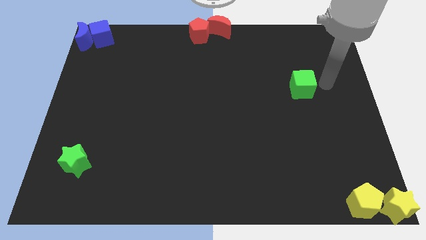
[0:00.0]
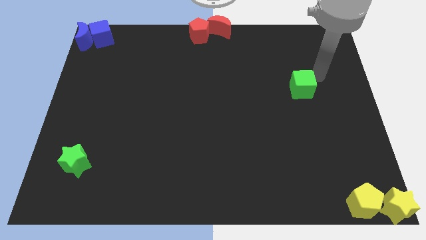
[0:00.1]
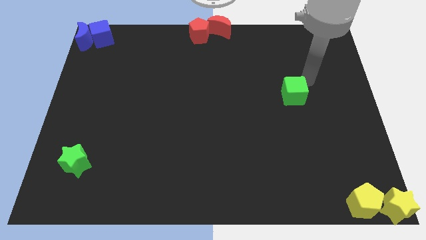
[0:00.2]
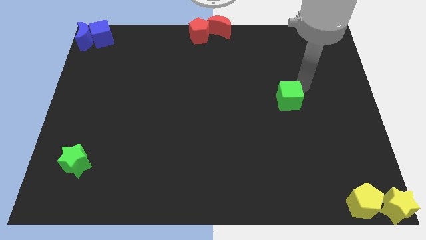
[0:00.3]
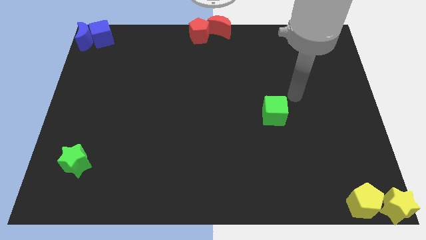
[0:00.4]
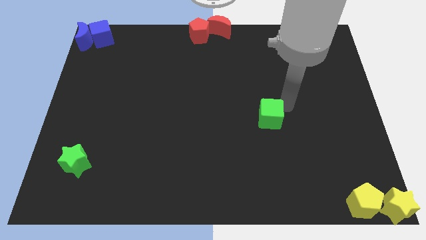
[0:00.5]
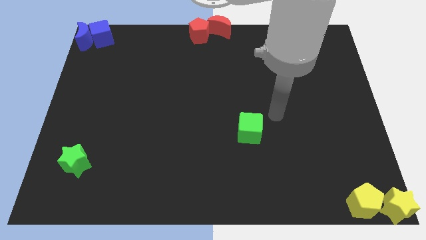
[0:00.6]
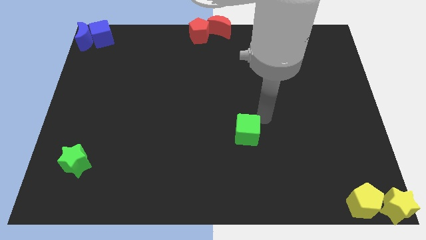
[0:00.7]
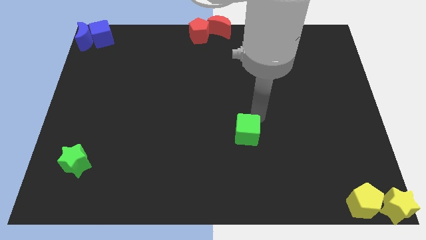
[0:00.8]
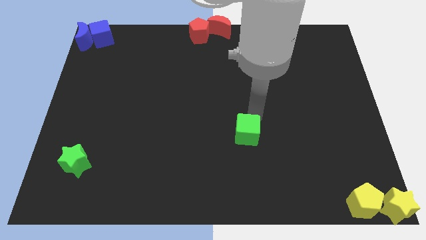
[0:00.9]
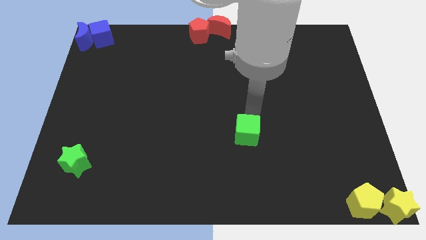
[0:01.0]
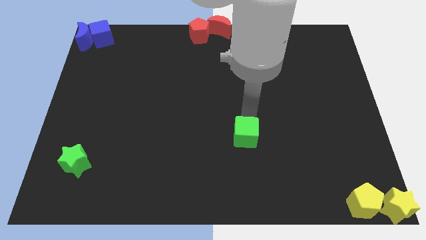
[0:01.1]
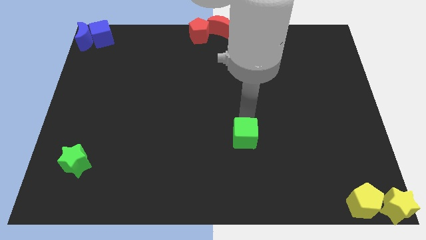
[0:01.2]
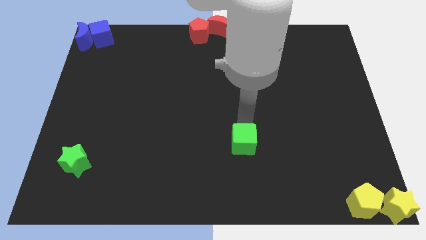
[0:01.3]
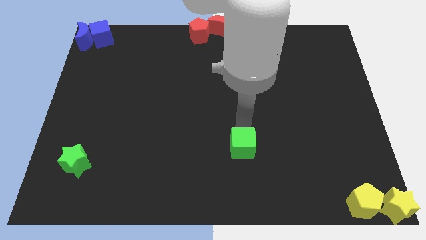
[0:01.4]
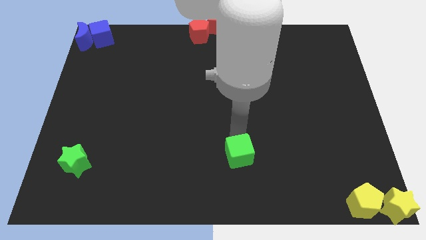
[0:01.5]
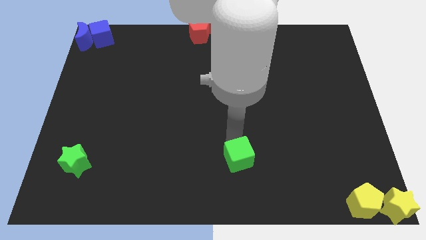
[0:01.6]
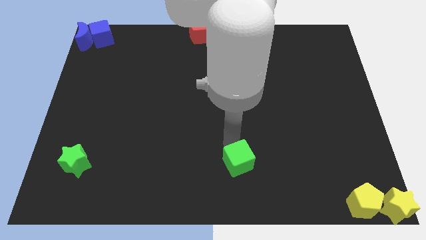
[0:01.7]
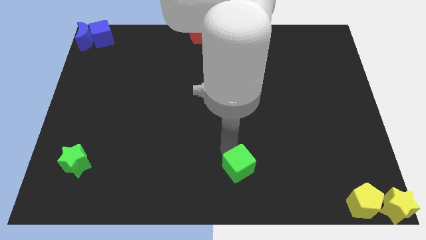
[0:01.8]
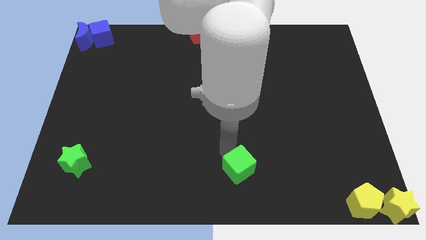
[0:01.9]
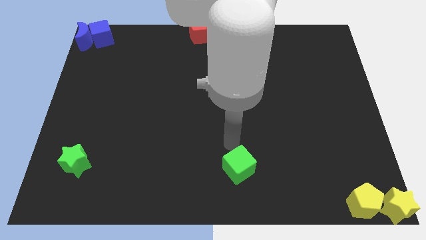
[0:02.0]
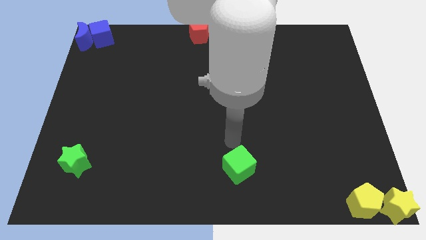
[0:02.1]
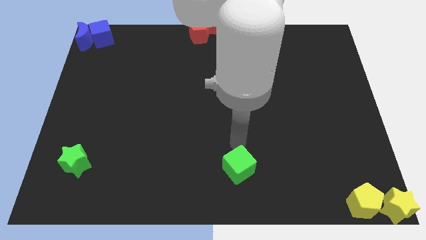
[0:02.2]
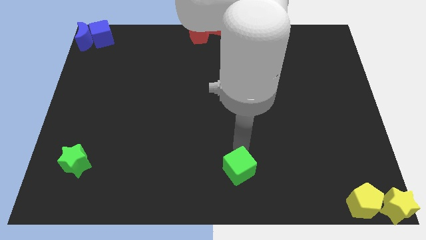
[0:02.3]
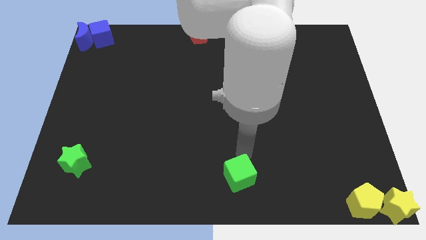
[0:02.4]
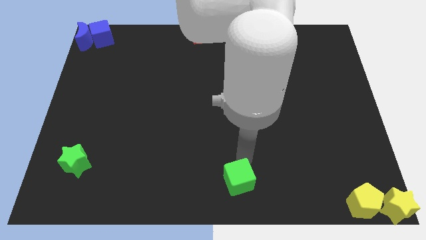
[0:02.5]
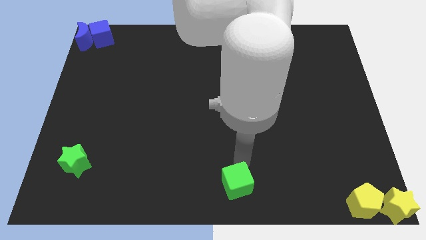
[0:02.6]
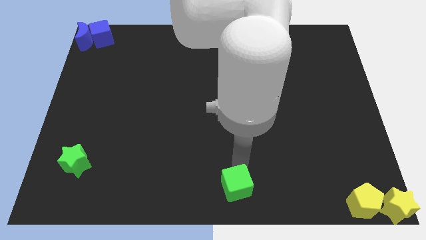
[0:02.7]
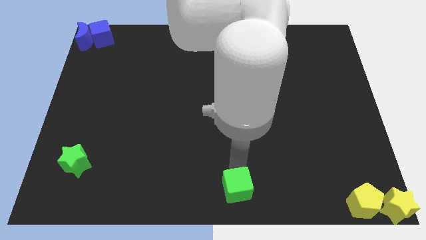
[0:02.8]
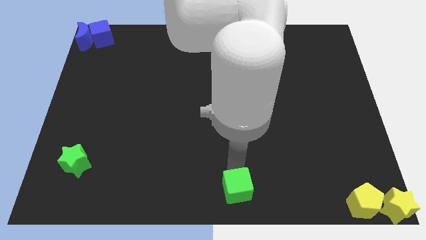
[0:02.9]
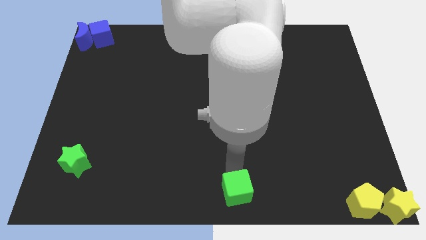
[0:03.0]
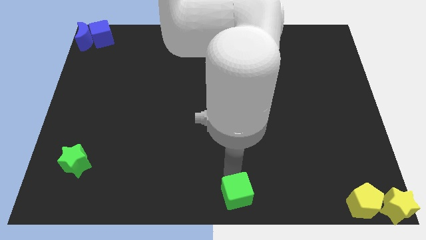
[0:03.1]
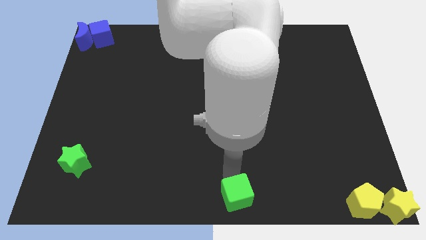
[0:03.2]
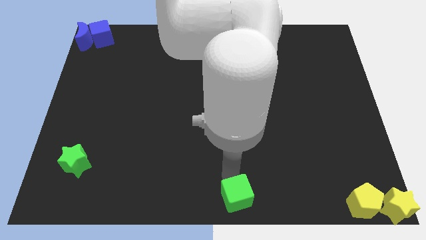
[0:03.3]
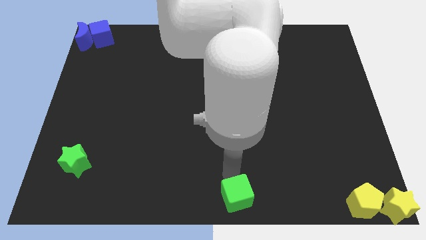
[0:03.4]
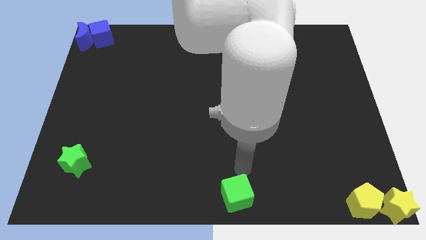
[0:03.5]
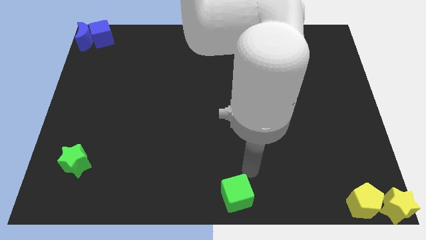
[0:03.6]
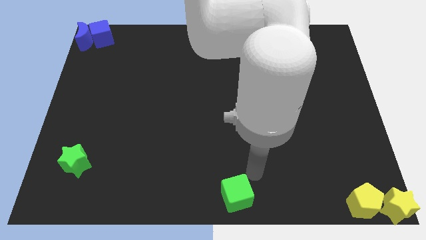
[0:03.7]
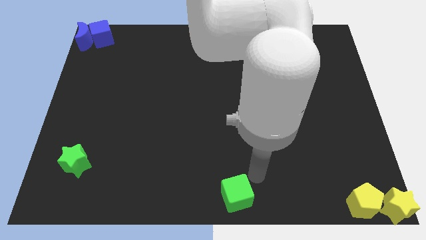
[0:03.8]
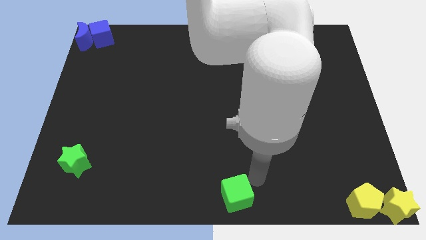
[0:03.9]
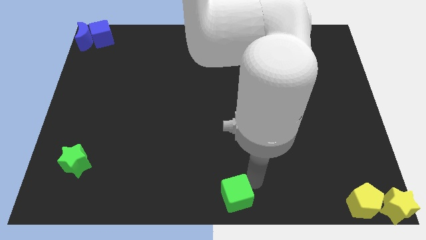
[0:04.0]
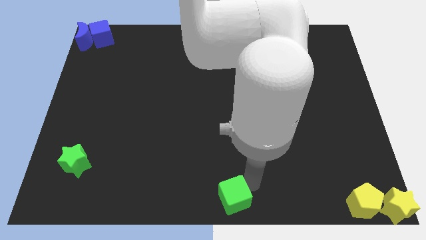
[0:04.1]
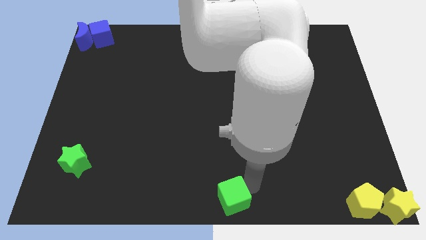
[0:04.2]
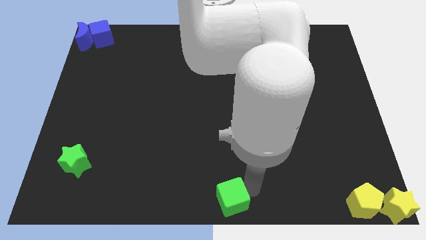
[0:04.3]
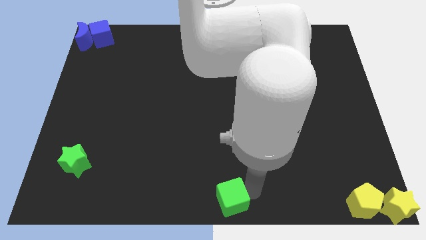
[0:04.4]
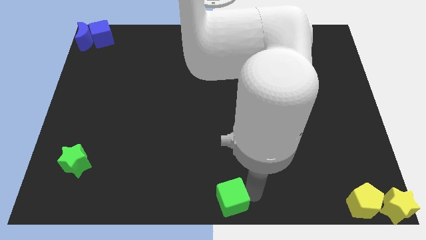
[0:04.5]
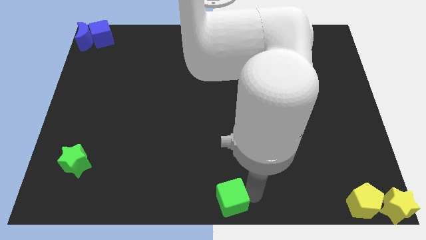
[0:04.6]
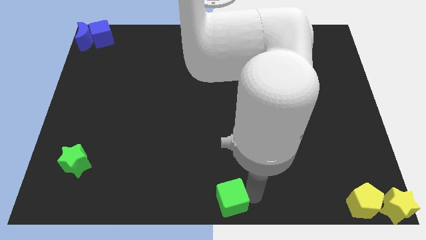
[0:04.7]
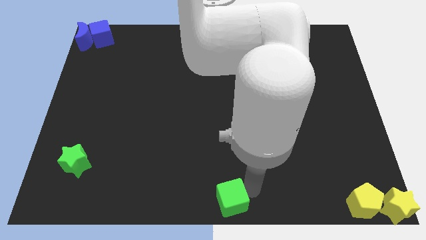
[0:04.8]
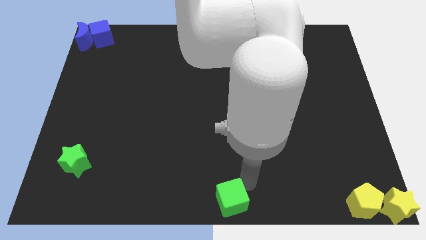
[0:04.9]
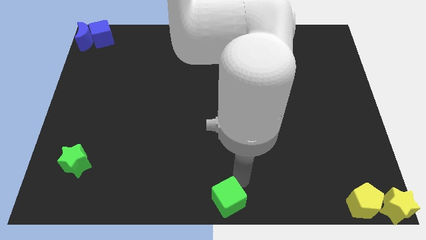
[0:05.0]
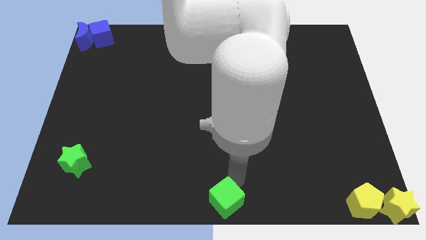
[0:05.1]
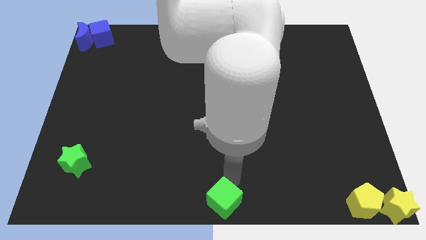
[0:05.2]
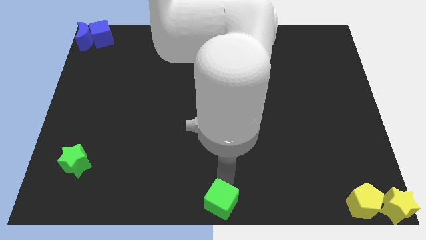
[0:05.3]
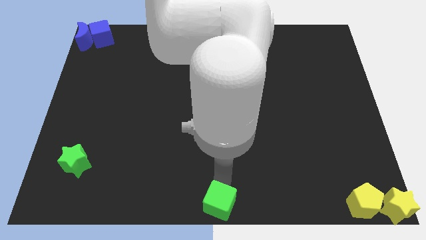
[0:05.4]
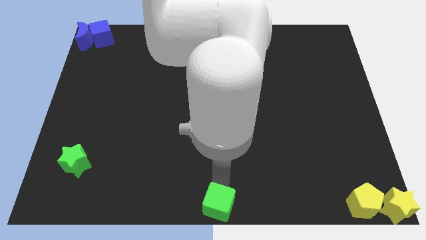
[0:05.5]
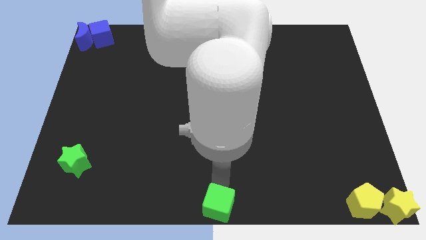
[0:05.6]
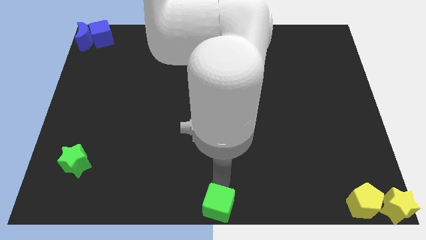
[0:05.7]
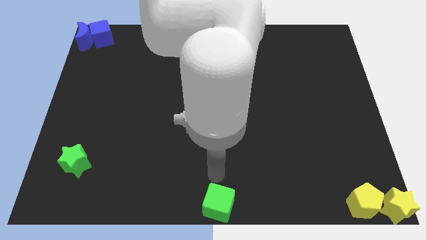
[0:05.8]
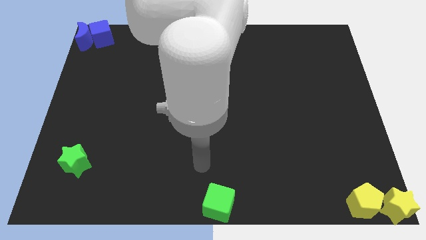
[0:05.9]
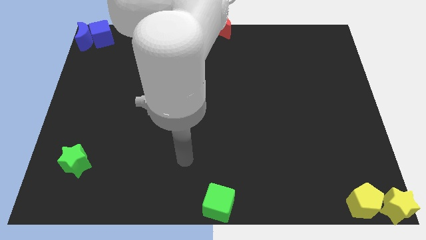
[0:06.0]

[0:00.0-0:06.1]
push green cube to the bottom center

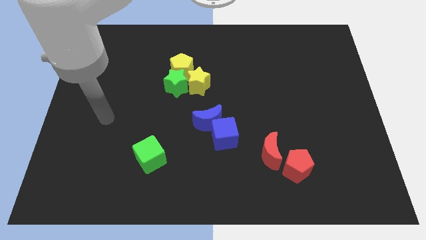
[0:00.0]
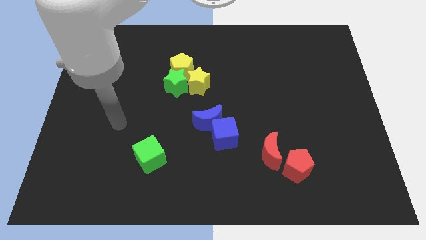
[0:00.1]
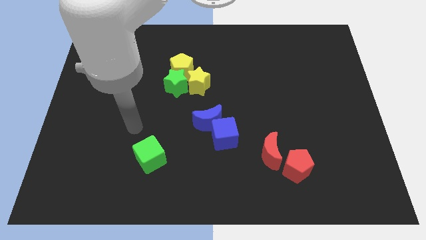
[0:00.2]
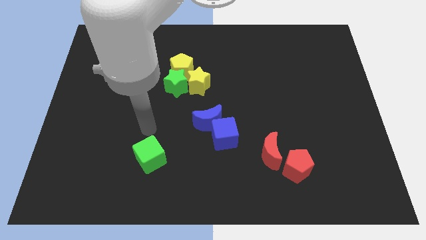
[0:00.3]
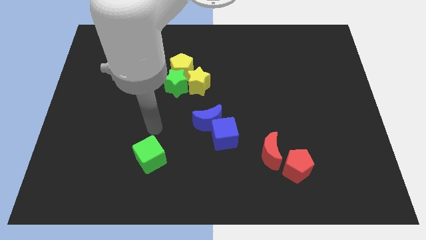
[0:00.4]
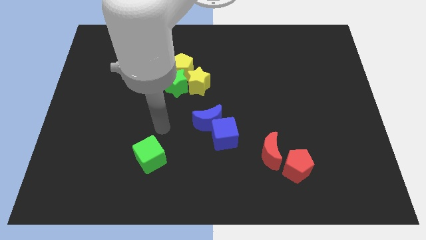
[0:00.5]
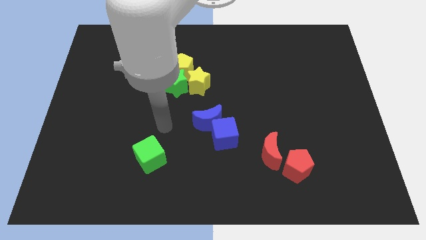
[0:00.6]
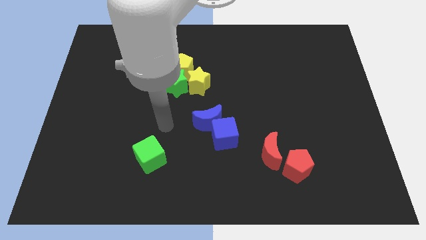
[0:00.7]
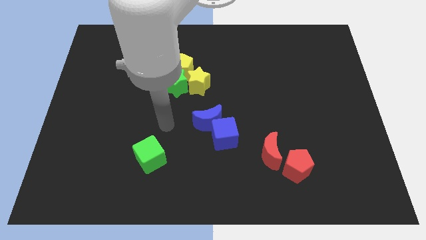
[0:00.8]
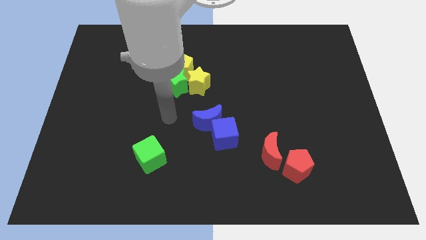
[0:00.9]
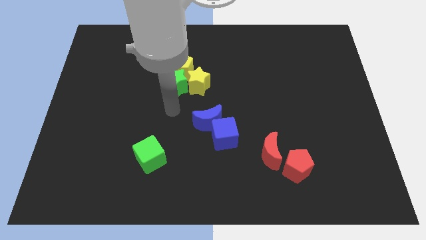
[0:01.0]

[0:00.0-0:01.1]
move your arm below the green star

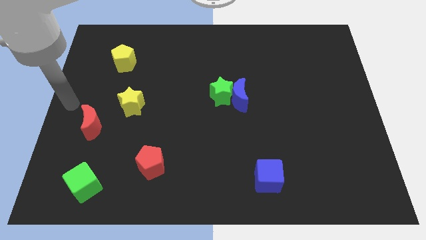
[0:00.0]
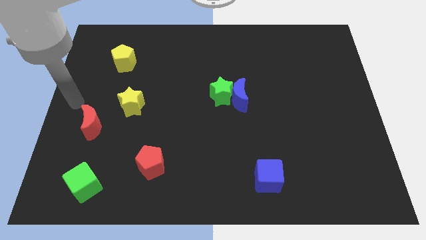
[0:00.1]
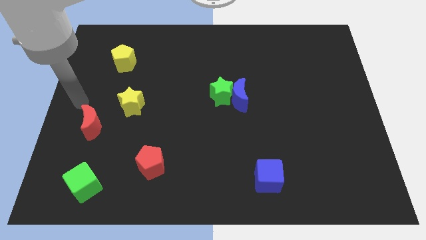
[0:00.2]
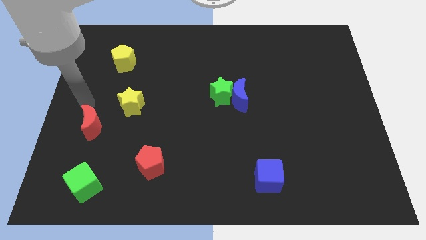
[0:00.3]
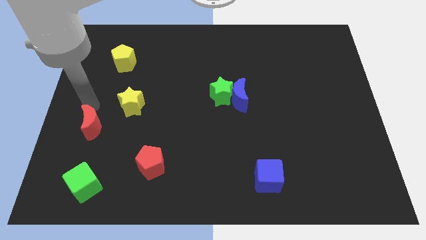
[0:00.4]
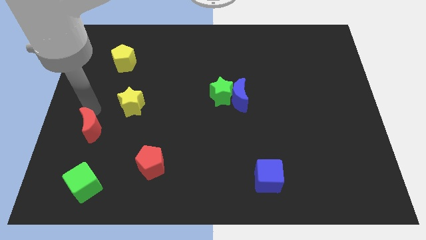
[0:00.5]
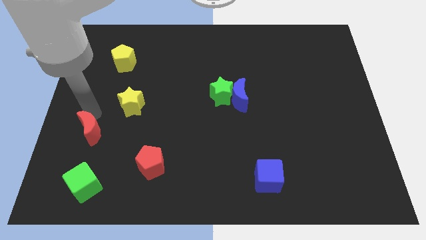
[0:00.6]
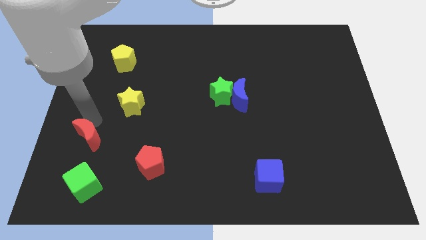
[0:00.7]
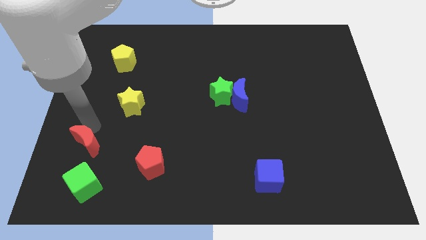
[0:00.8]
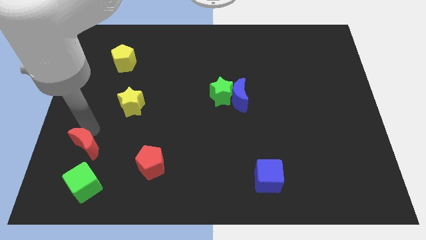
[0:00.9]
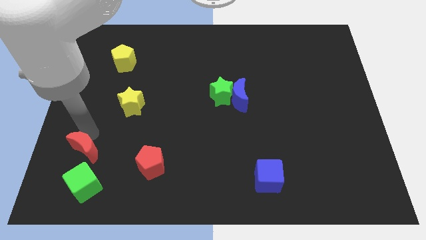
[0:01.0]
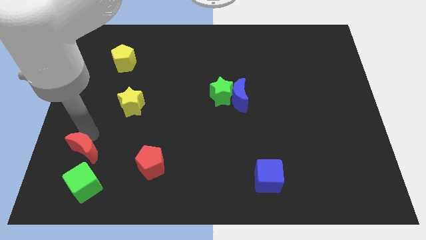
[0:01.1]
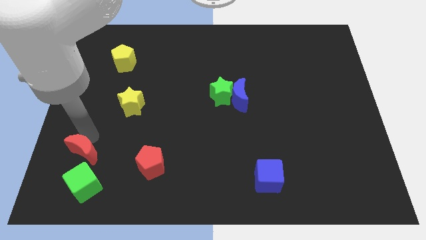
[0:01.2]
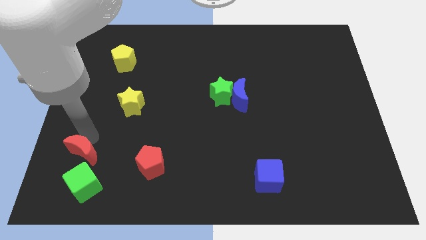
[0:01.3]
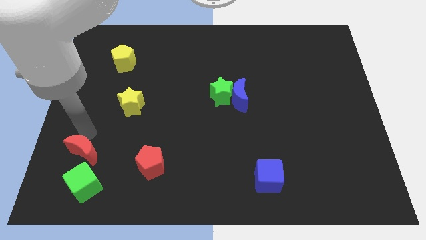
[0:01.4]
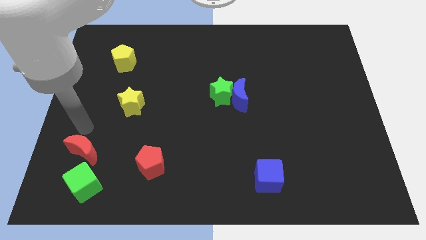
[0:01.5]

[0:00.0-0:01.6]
slide the red crescent slightly towards the green cube
